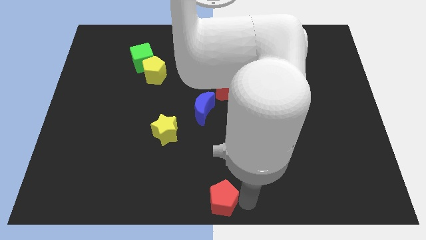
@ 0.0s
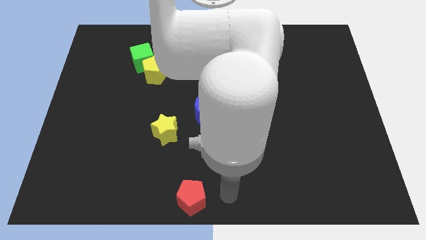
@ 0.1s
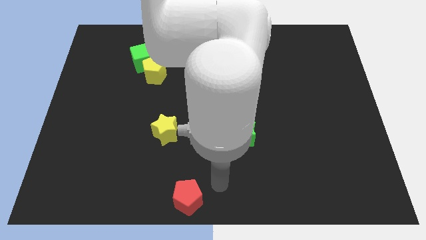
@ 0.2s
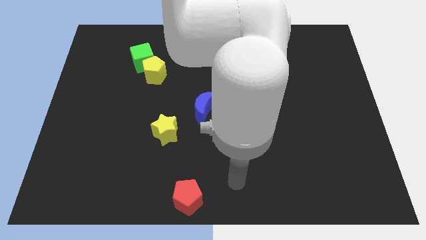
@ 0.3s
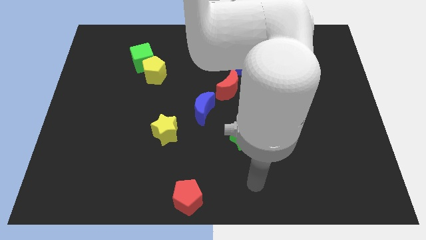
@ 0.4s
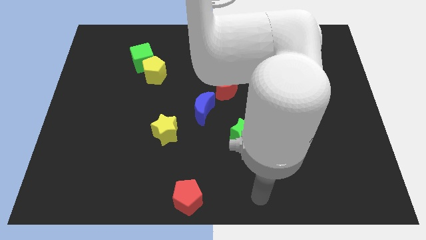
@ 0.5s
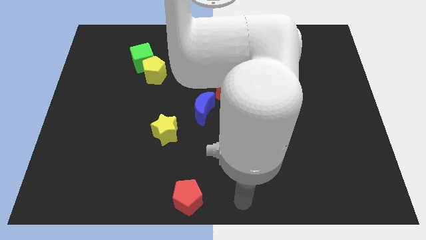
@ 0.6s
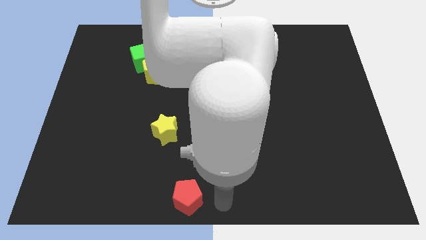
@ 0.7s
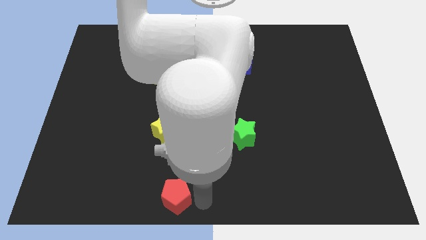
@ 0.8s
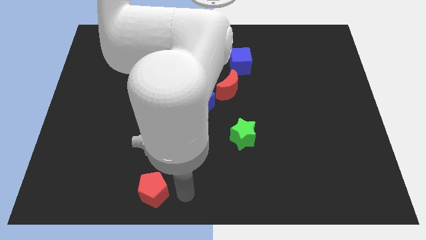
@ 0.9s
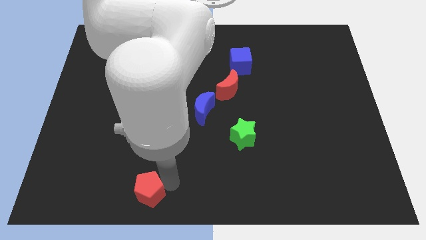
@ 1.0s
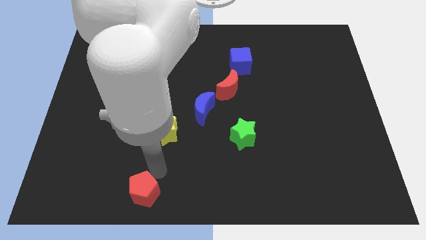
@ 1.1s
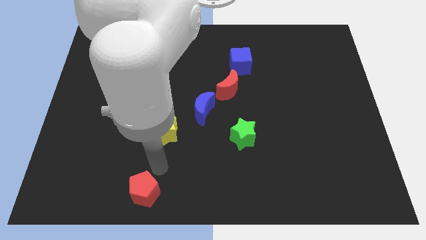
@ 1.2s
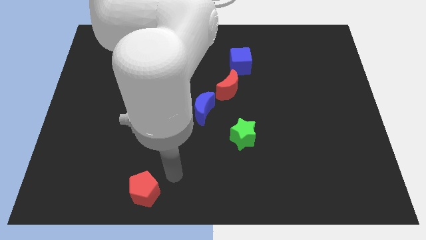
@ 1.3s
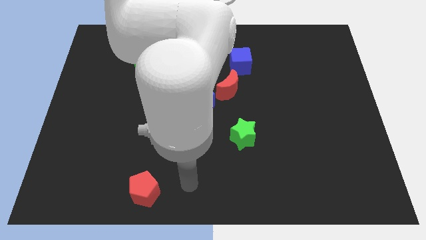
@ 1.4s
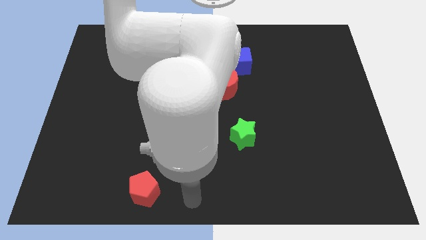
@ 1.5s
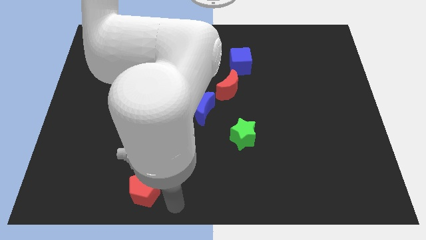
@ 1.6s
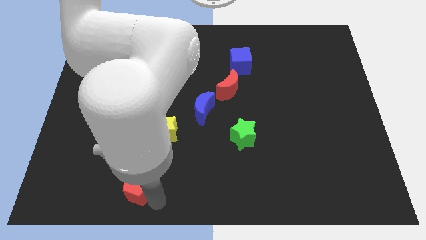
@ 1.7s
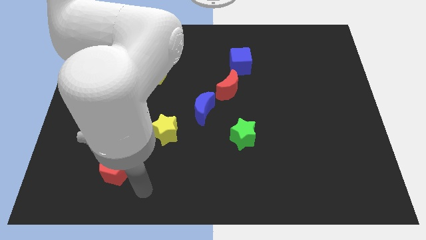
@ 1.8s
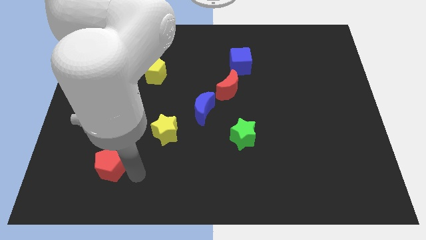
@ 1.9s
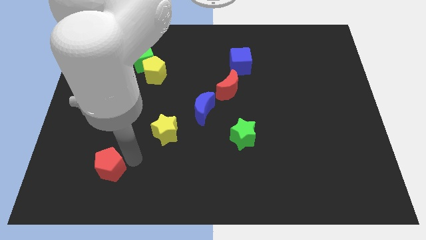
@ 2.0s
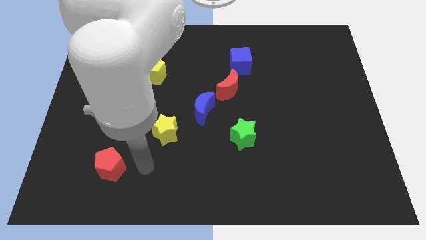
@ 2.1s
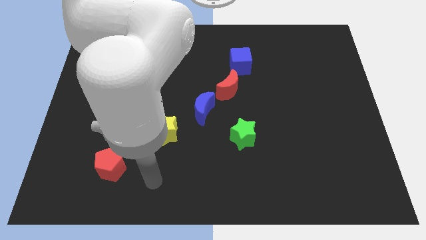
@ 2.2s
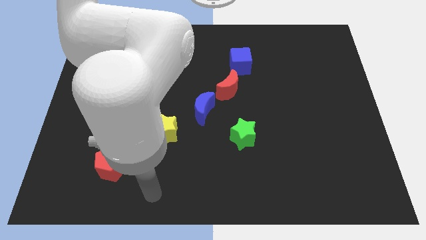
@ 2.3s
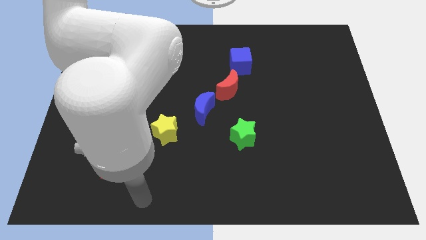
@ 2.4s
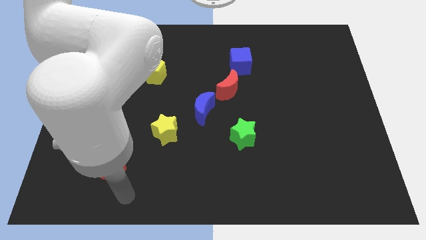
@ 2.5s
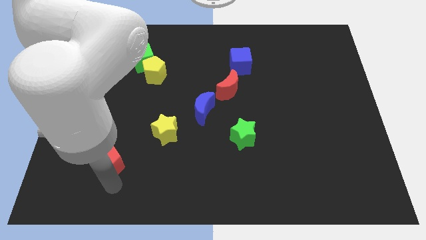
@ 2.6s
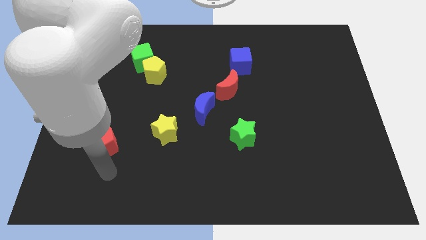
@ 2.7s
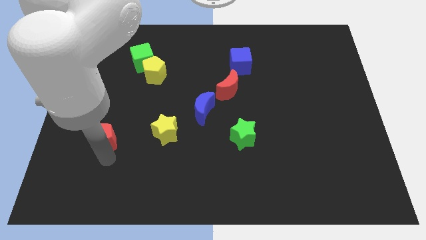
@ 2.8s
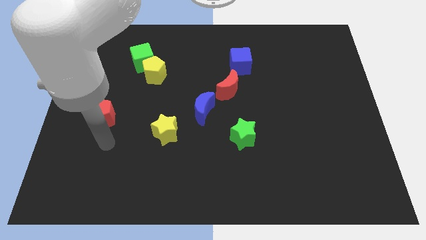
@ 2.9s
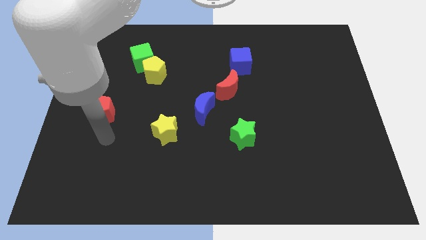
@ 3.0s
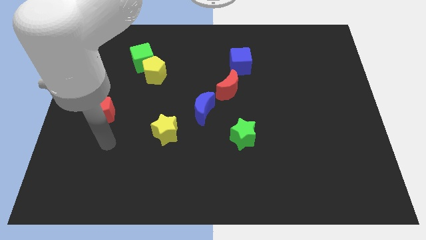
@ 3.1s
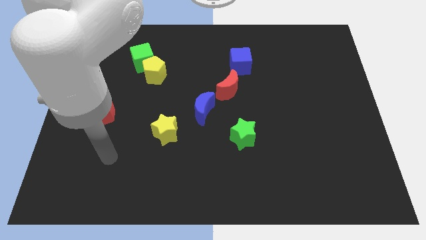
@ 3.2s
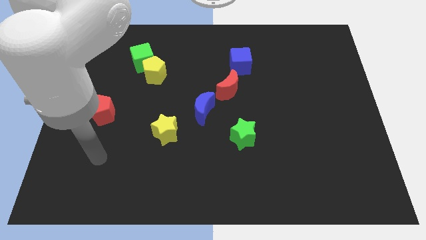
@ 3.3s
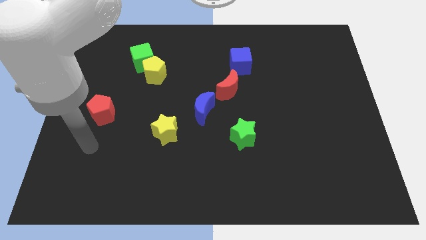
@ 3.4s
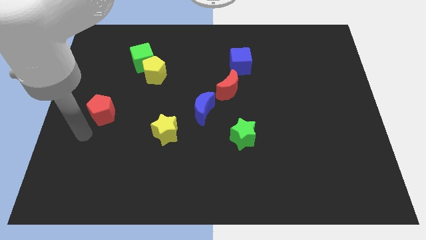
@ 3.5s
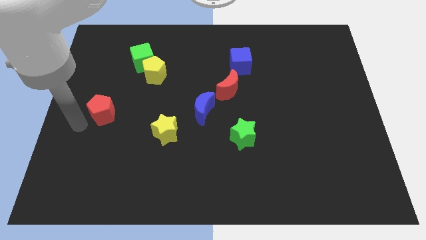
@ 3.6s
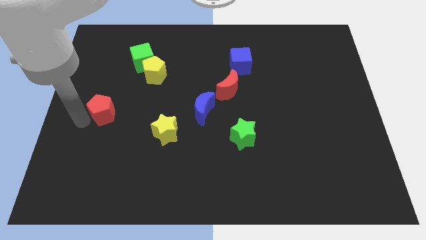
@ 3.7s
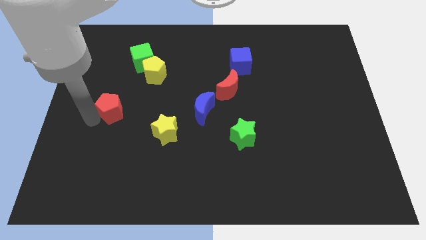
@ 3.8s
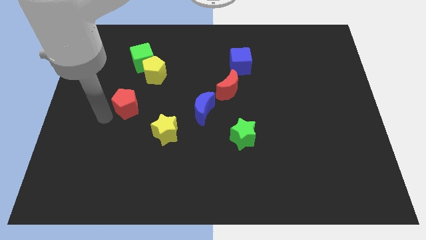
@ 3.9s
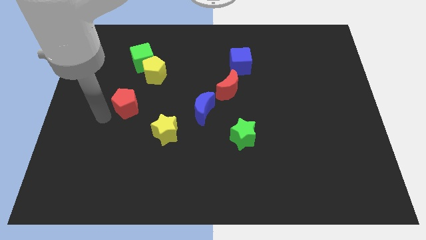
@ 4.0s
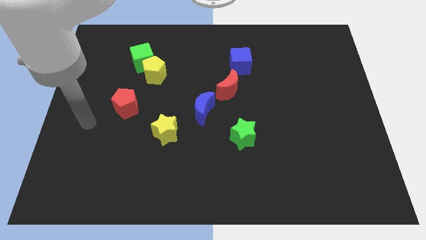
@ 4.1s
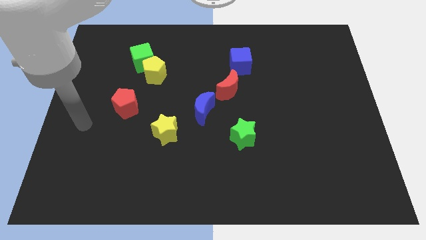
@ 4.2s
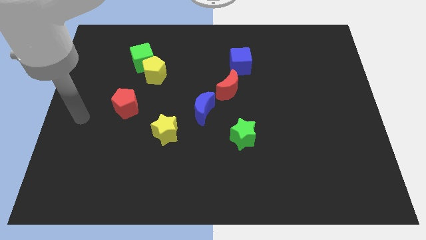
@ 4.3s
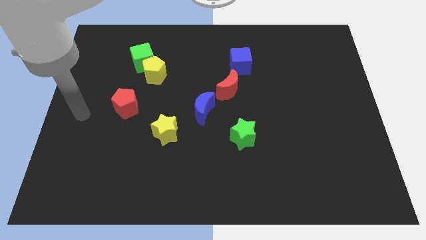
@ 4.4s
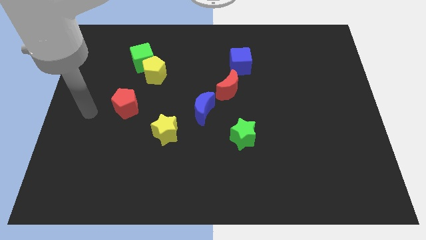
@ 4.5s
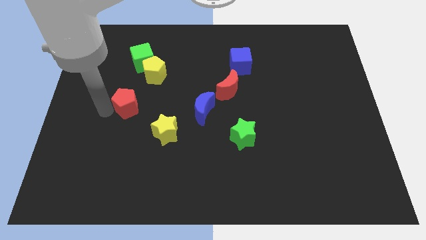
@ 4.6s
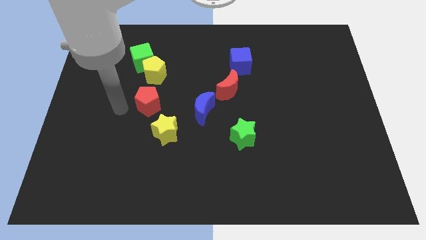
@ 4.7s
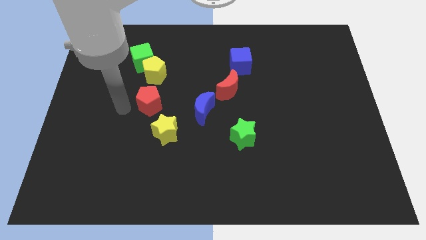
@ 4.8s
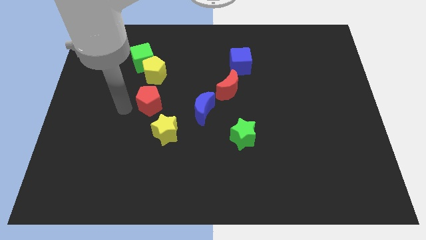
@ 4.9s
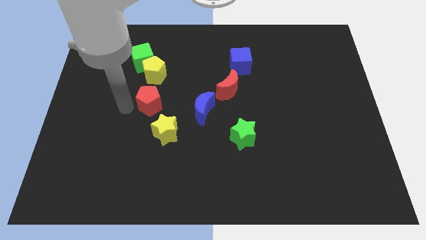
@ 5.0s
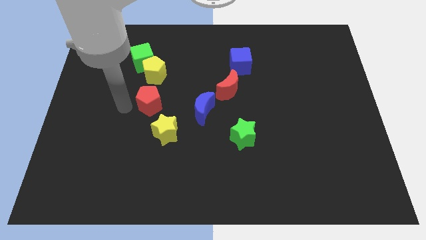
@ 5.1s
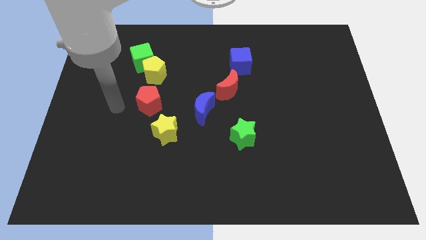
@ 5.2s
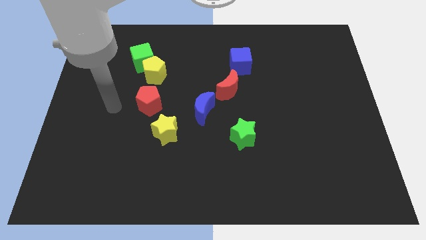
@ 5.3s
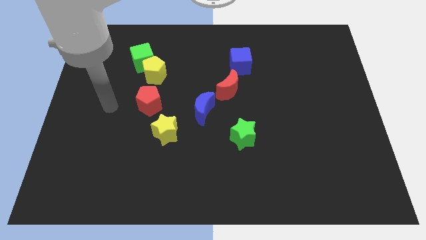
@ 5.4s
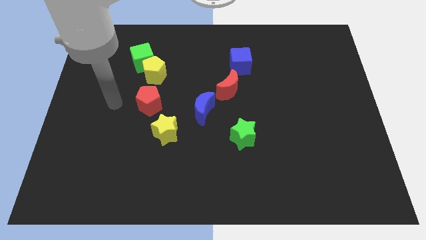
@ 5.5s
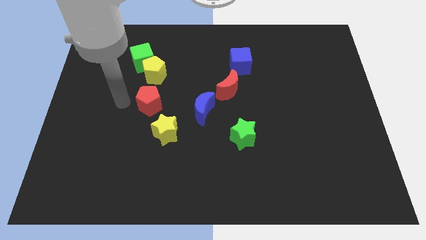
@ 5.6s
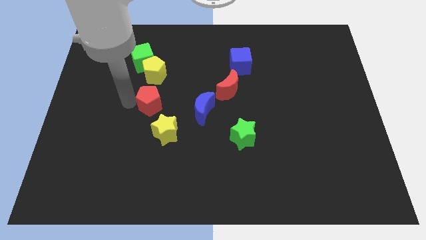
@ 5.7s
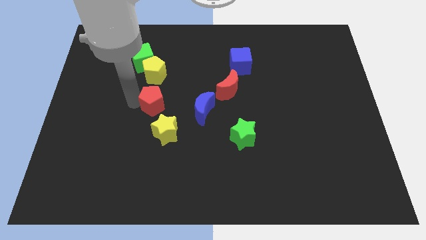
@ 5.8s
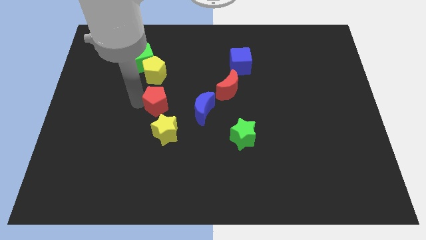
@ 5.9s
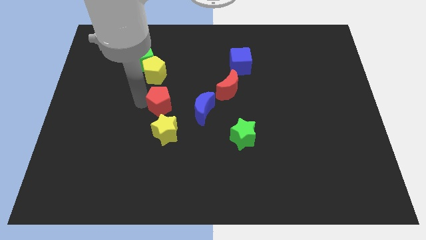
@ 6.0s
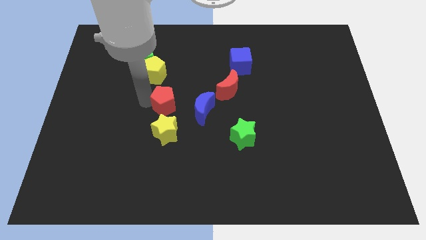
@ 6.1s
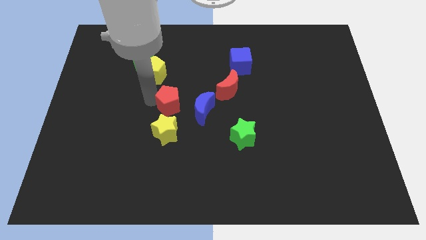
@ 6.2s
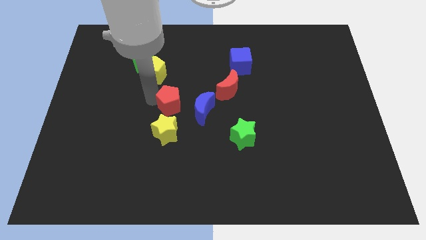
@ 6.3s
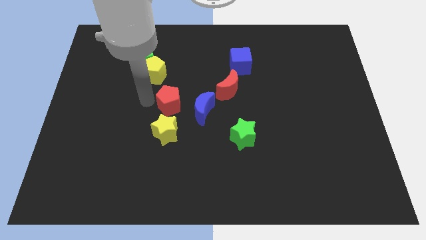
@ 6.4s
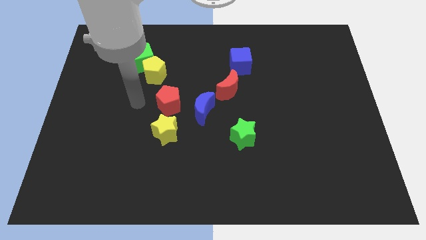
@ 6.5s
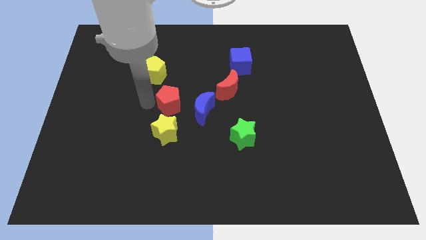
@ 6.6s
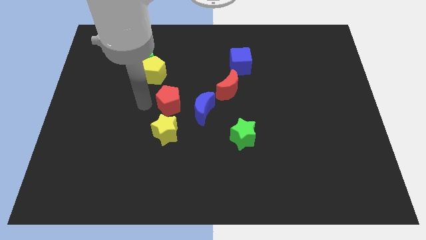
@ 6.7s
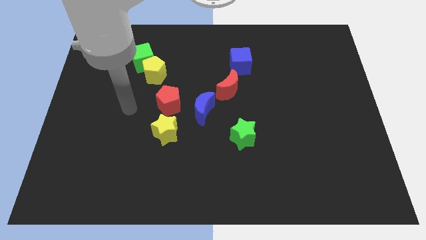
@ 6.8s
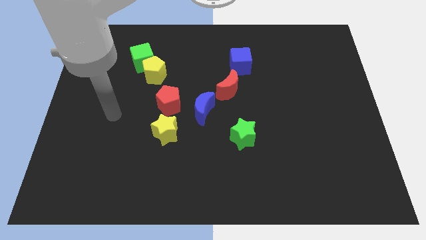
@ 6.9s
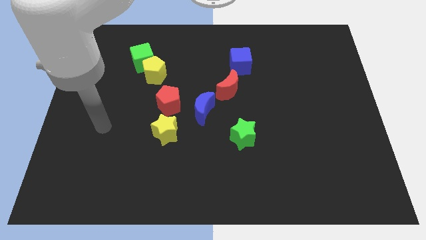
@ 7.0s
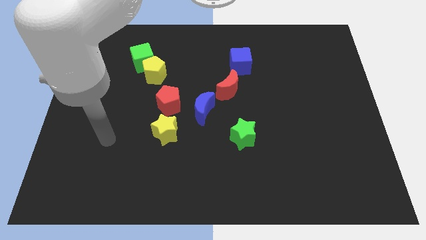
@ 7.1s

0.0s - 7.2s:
place red pentagon below yellow pentagon

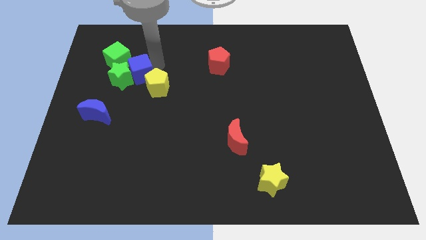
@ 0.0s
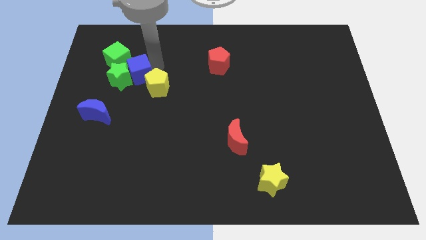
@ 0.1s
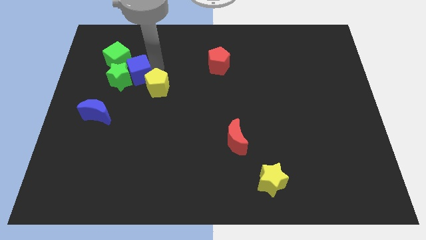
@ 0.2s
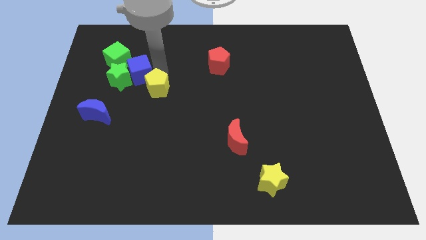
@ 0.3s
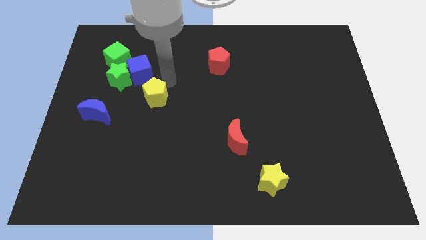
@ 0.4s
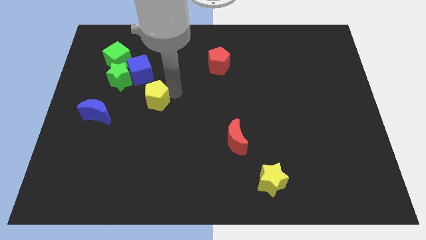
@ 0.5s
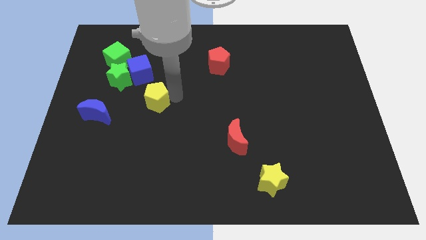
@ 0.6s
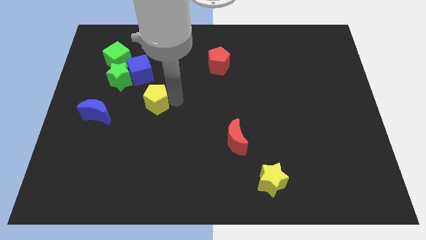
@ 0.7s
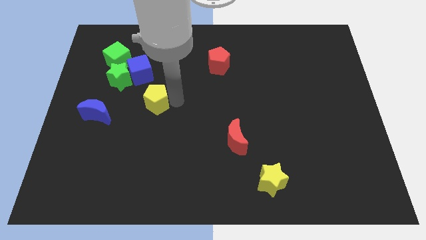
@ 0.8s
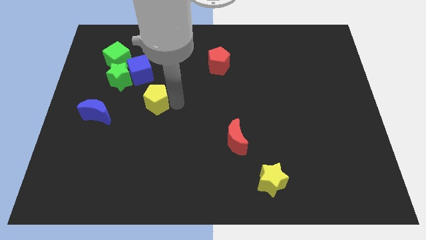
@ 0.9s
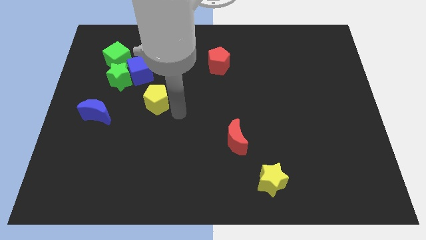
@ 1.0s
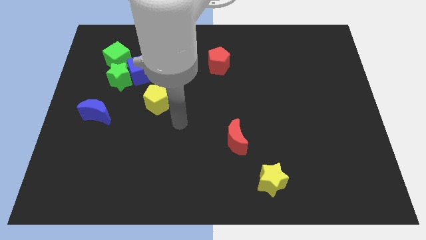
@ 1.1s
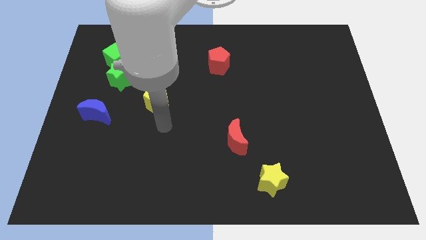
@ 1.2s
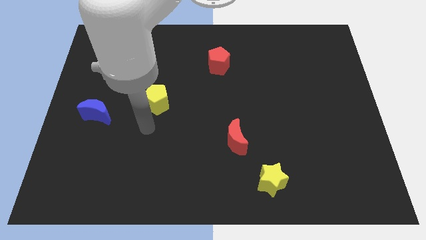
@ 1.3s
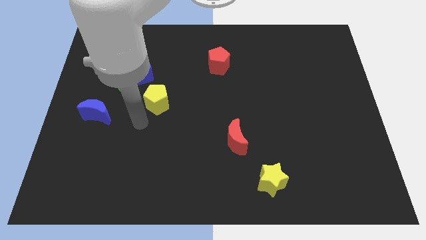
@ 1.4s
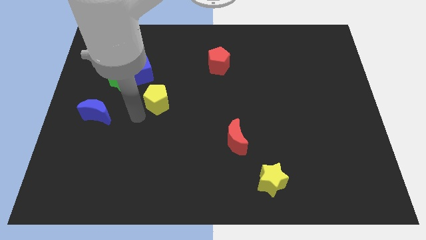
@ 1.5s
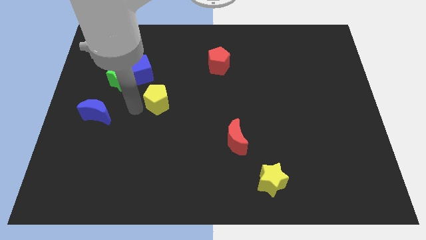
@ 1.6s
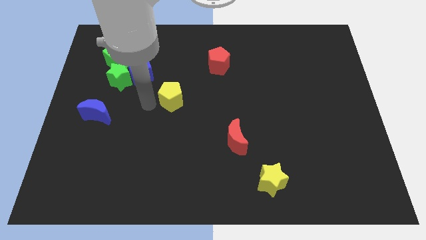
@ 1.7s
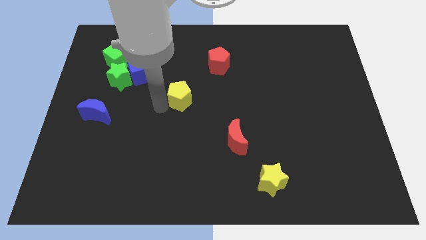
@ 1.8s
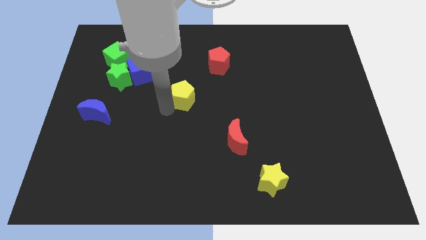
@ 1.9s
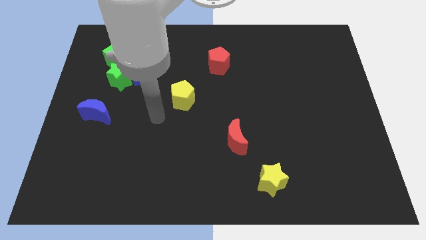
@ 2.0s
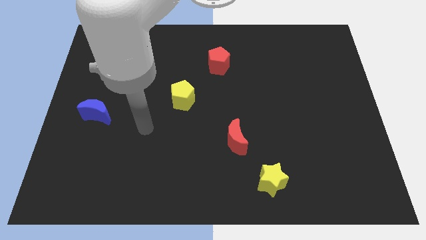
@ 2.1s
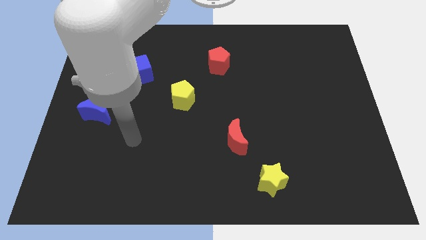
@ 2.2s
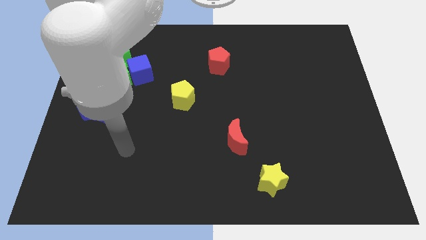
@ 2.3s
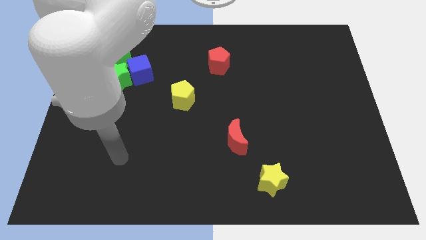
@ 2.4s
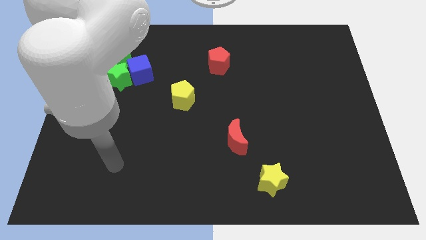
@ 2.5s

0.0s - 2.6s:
push the yellow pentagon towards the center of the board
